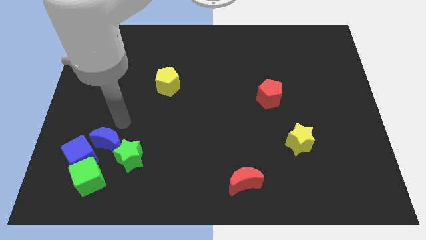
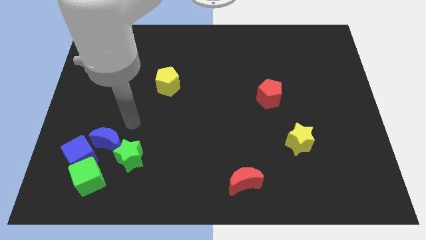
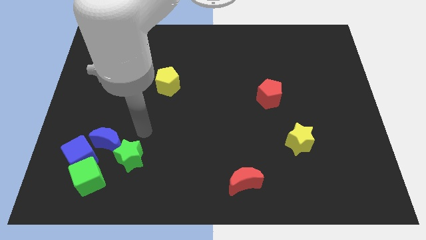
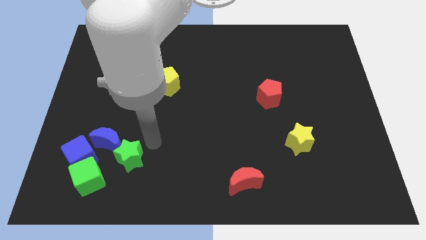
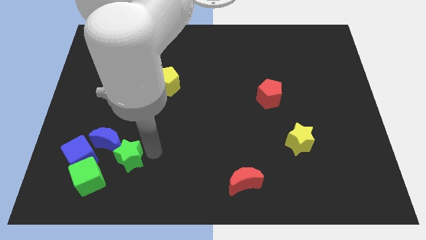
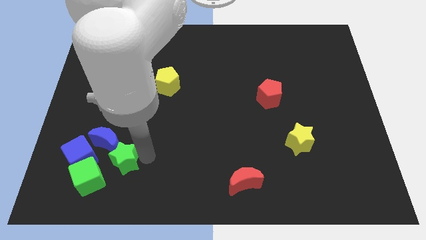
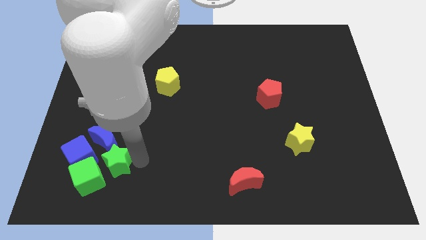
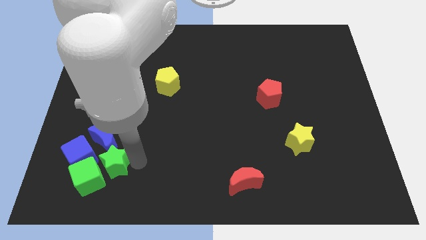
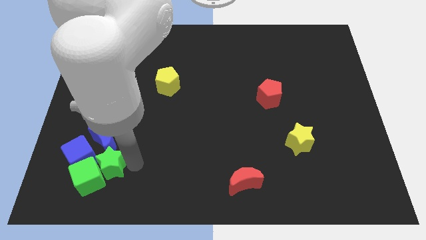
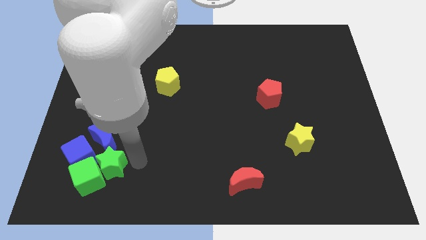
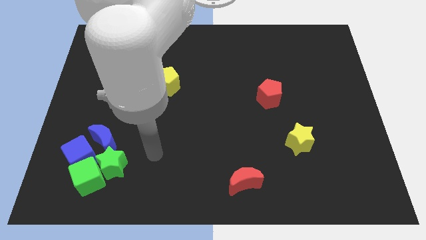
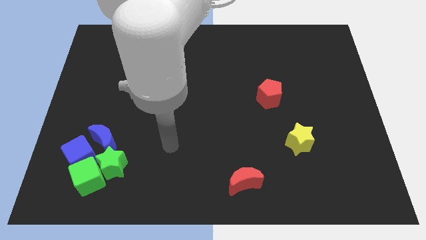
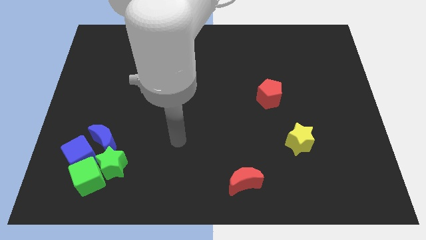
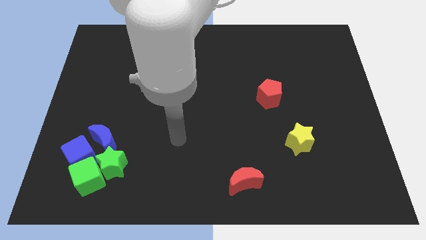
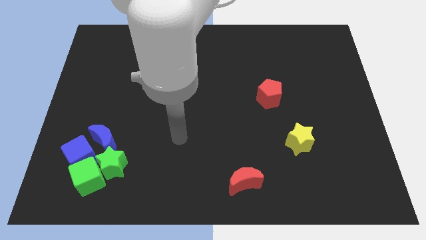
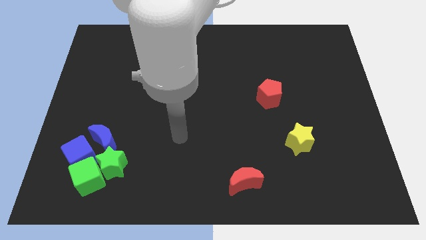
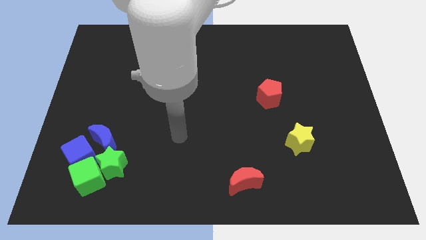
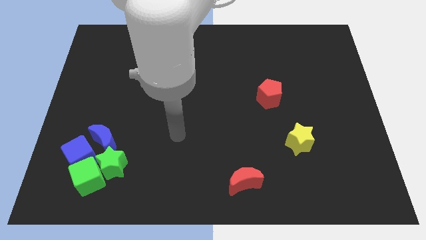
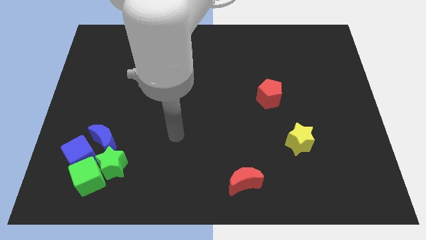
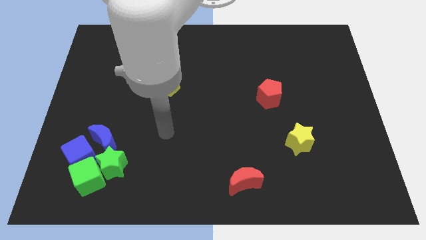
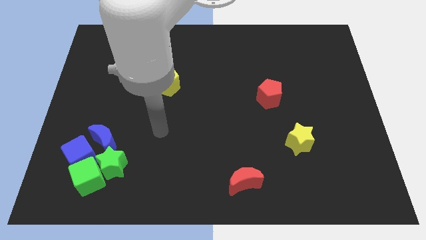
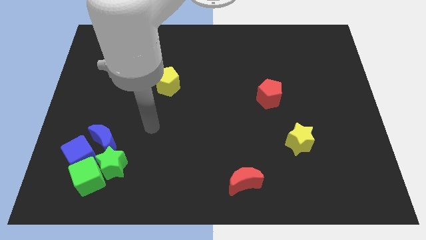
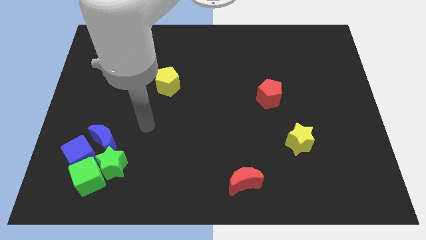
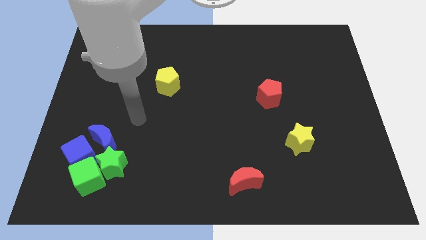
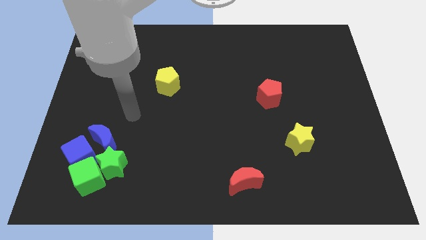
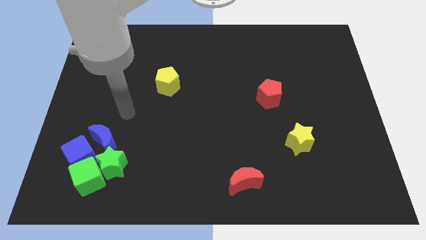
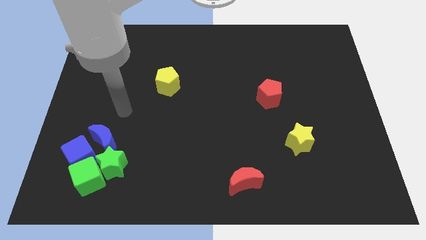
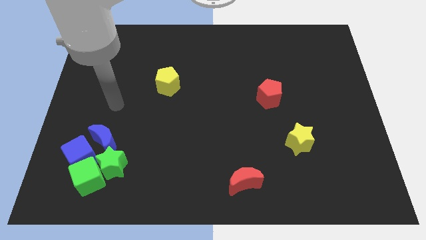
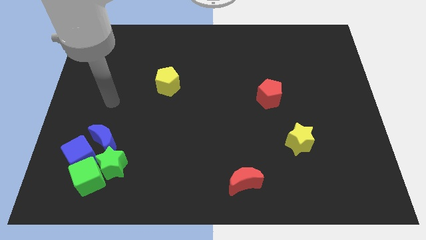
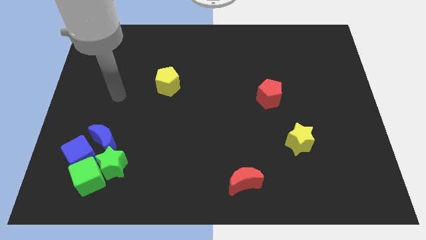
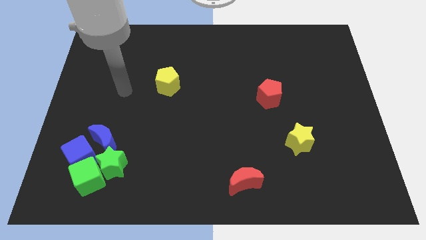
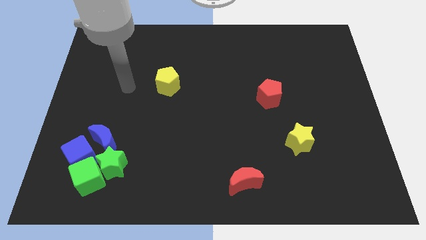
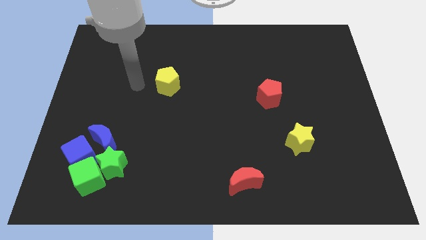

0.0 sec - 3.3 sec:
place the green star beside the green cube

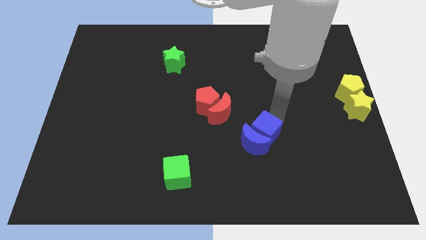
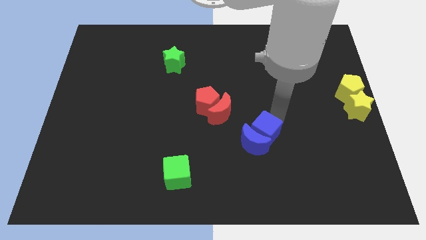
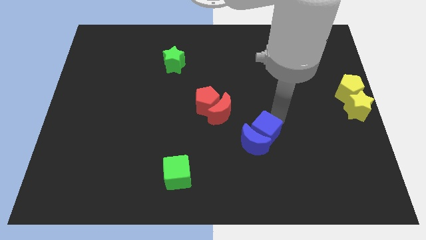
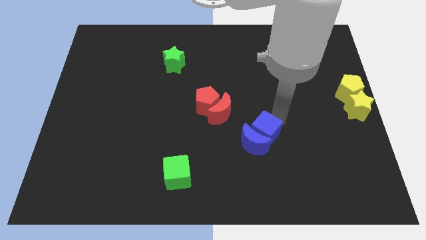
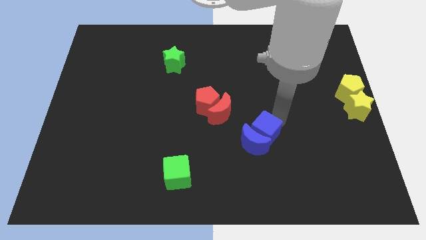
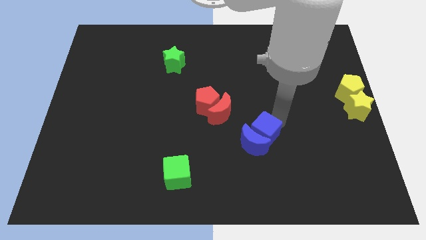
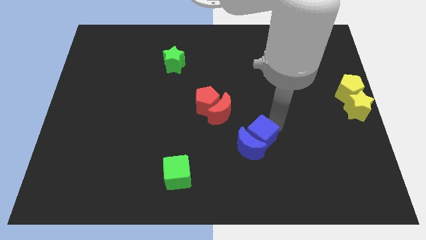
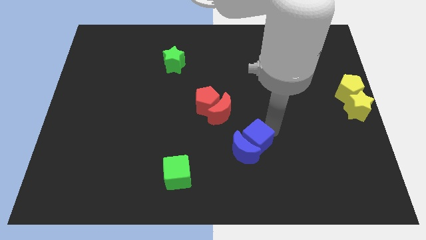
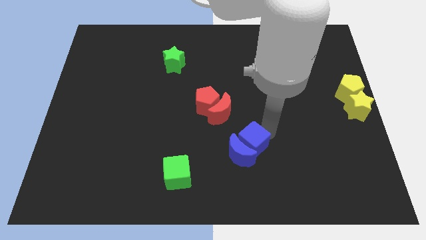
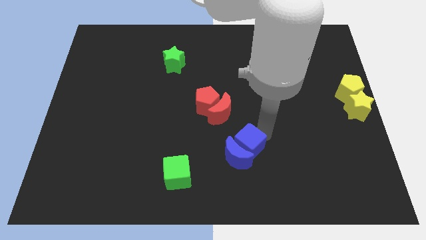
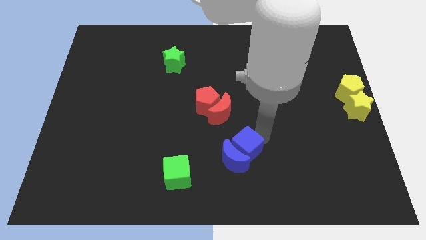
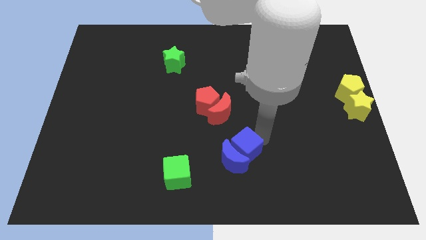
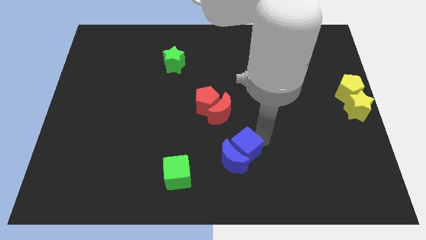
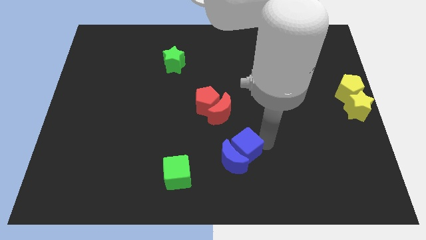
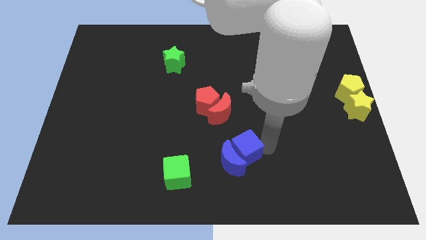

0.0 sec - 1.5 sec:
push the blue crescent into the blue cube towards the bottom center of the board

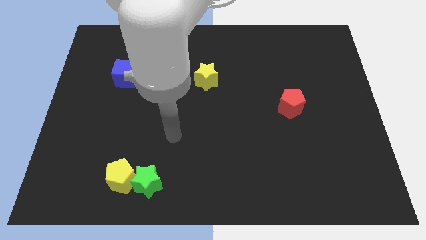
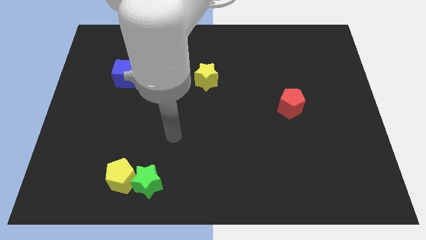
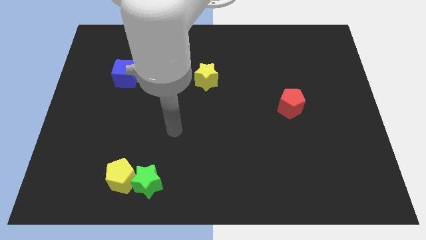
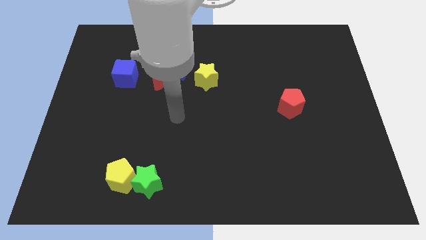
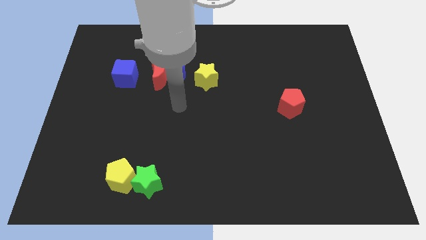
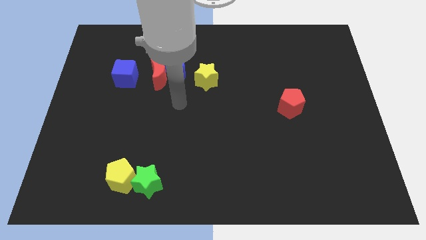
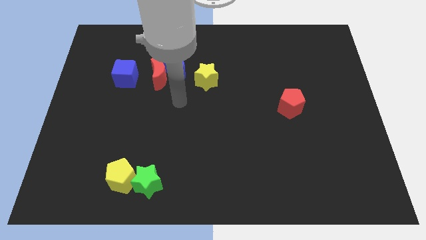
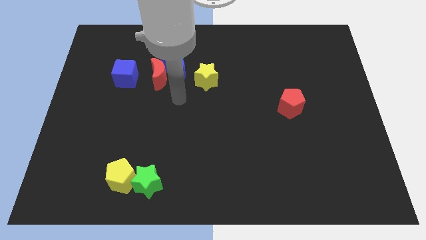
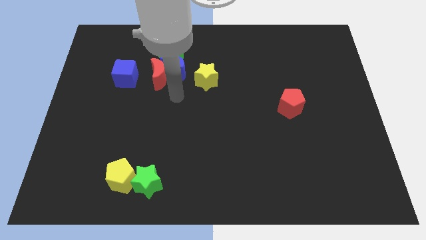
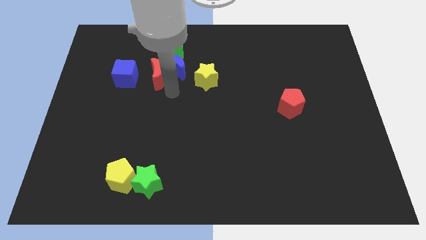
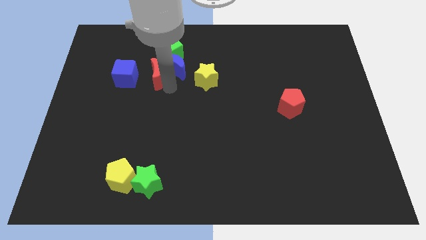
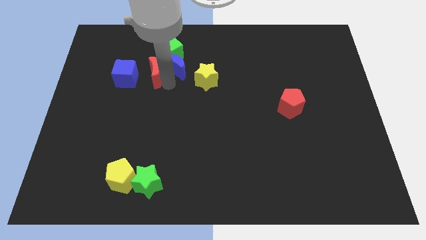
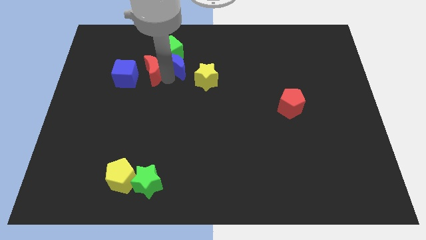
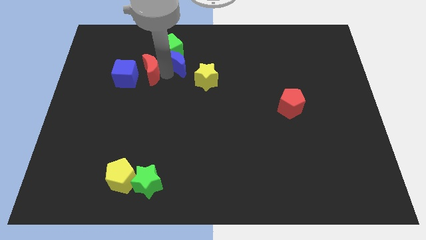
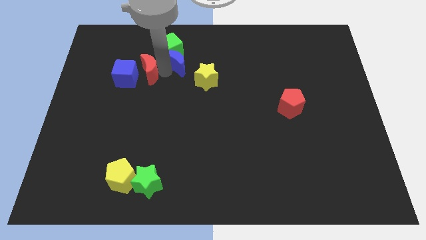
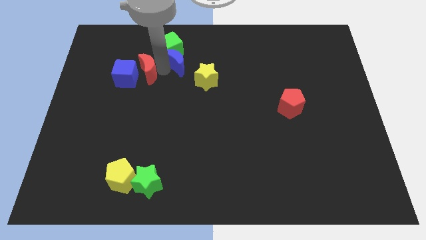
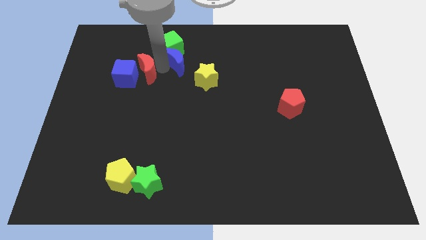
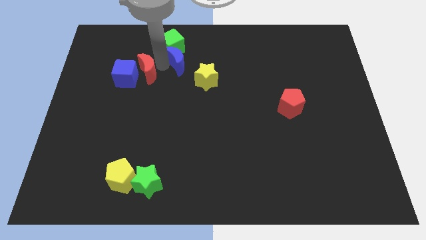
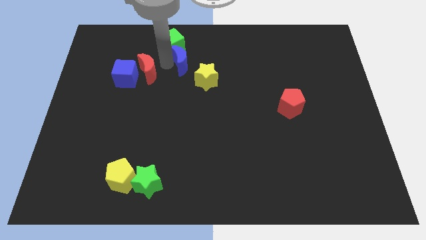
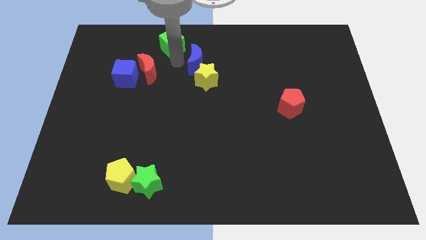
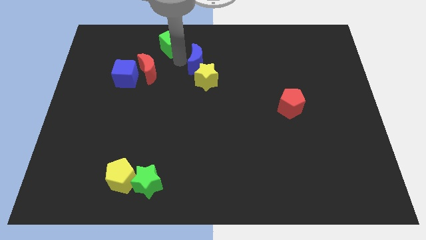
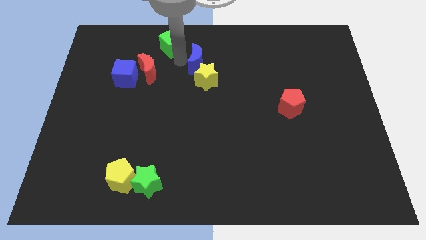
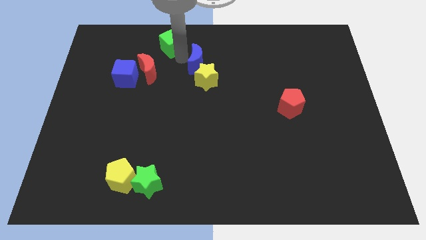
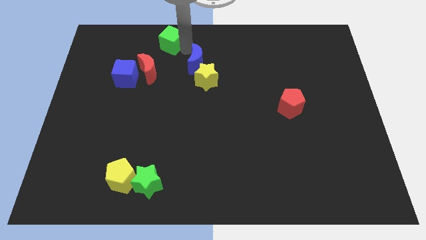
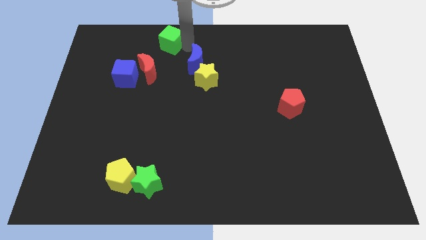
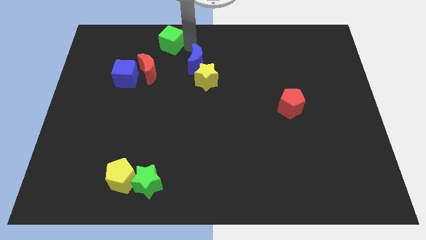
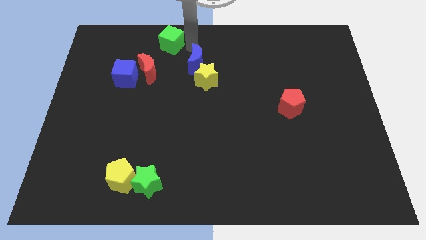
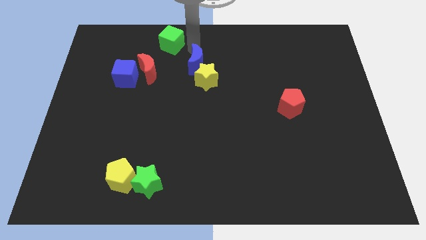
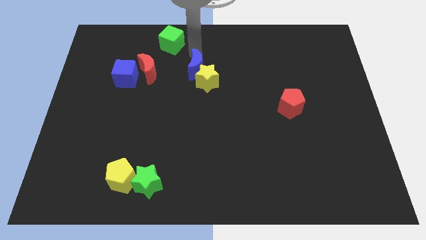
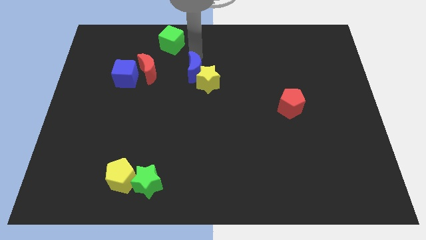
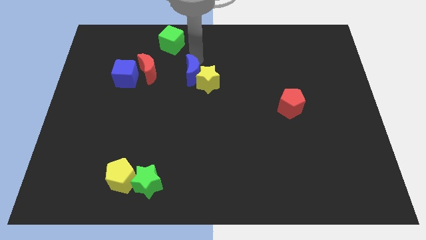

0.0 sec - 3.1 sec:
push blue crescent near to yellow star

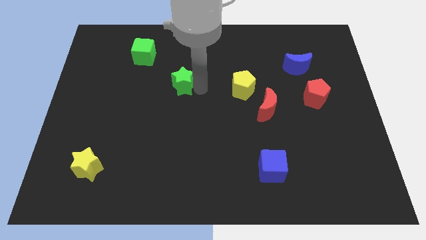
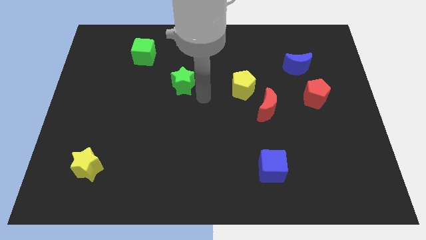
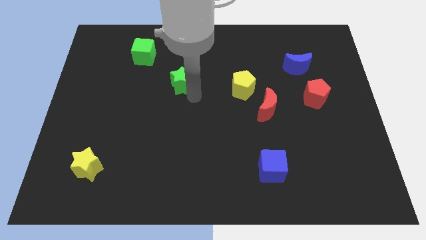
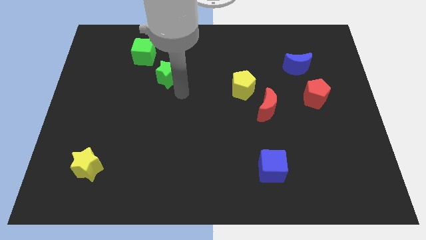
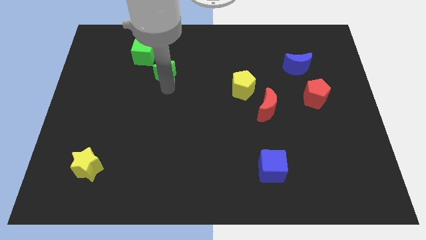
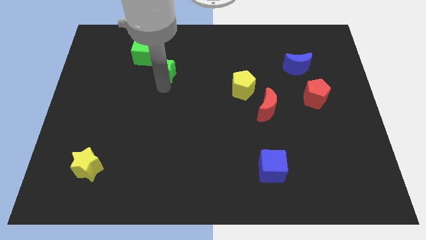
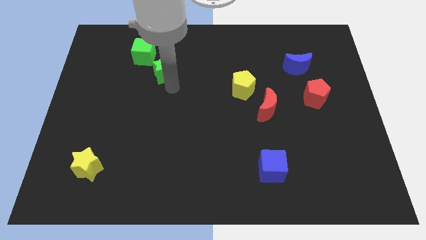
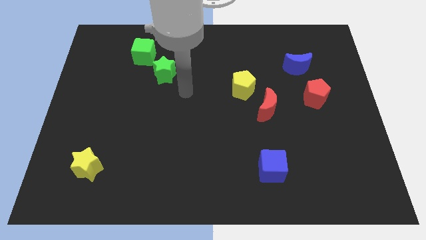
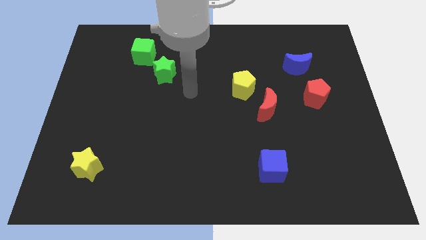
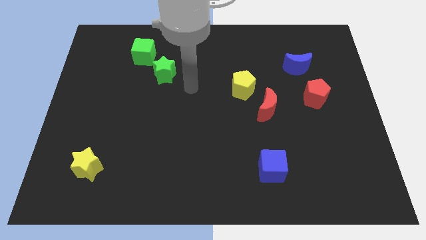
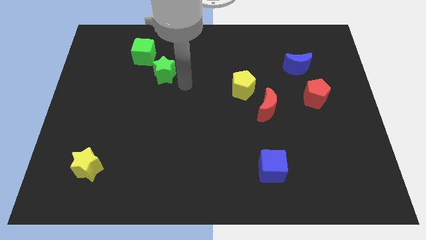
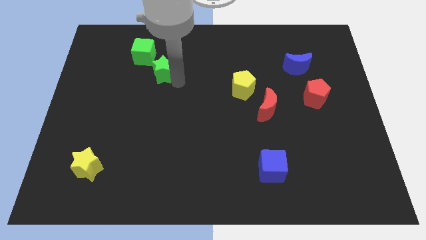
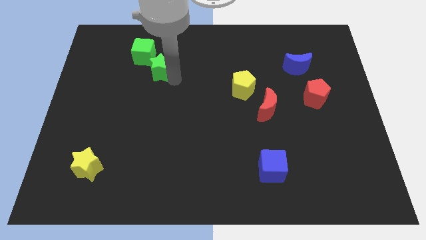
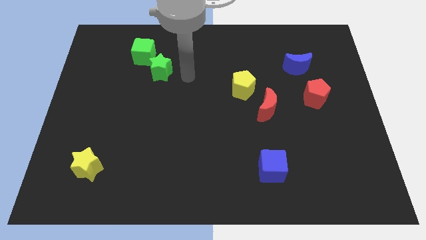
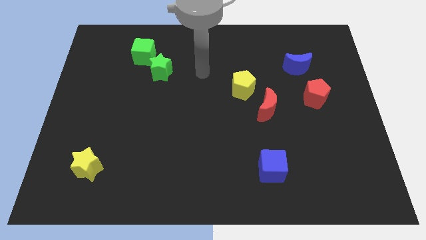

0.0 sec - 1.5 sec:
push the green star bottom right to the green cube
